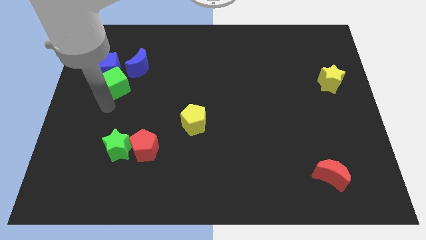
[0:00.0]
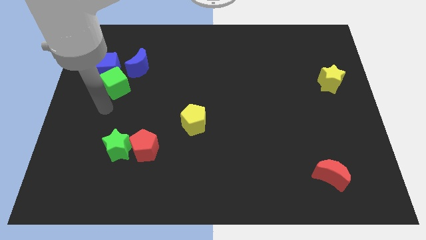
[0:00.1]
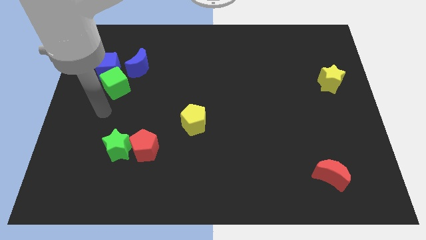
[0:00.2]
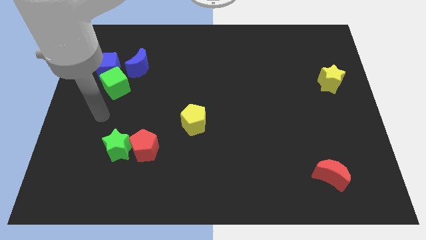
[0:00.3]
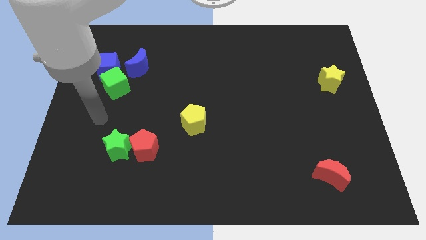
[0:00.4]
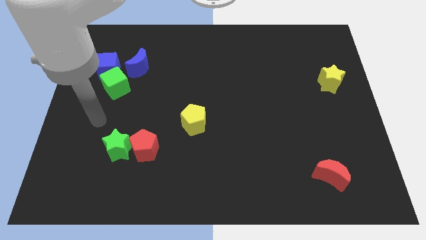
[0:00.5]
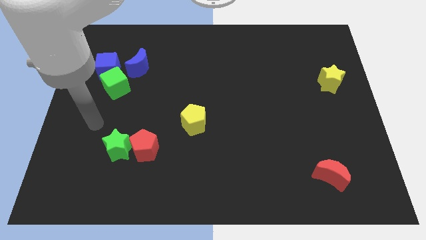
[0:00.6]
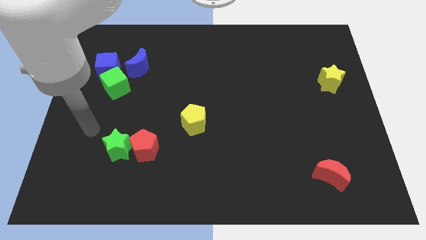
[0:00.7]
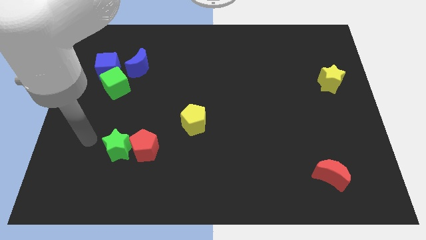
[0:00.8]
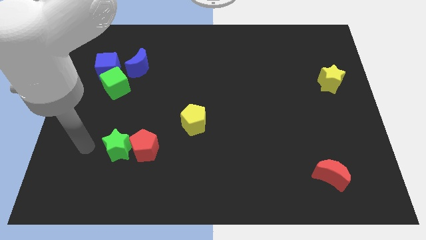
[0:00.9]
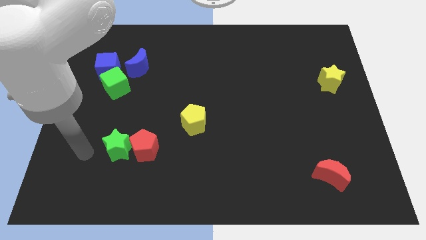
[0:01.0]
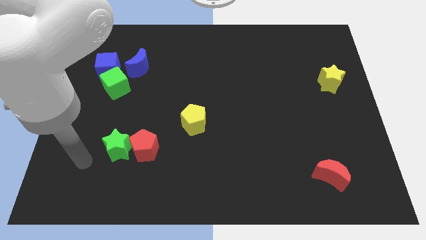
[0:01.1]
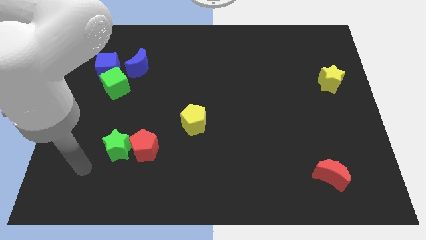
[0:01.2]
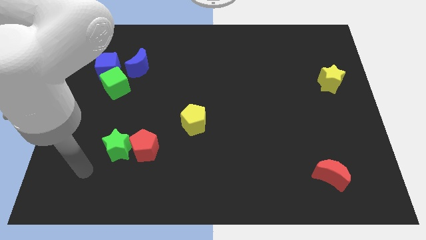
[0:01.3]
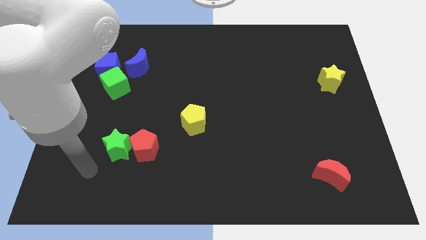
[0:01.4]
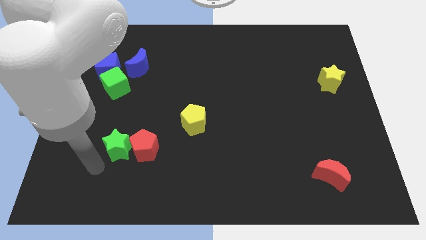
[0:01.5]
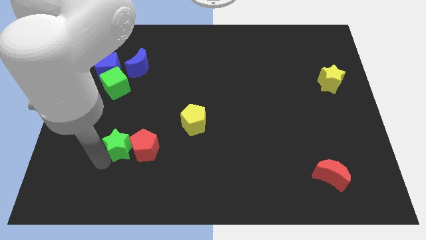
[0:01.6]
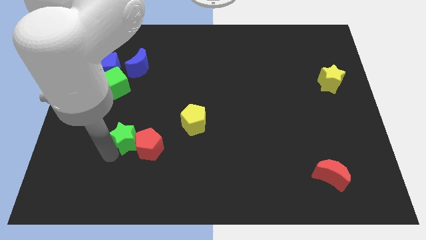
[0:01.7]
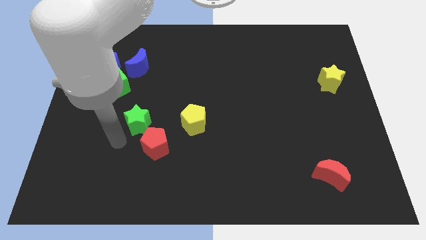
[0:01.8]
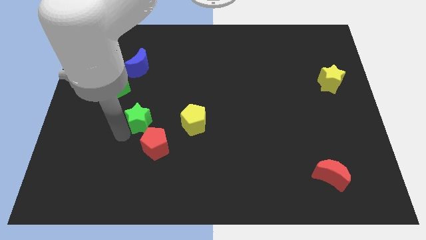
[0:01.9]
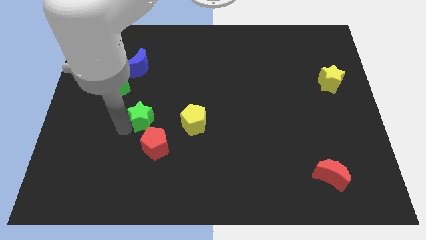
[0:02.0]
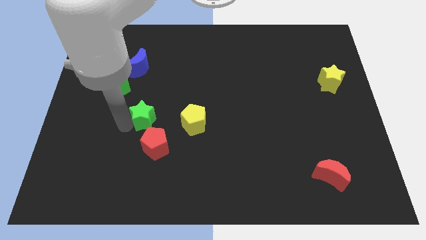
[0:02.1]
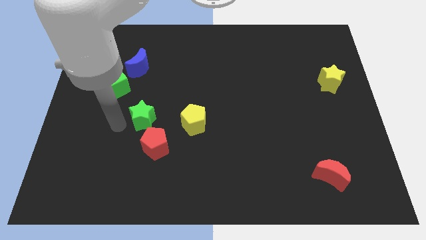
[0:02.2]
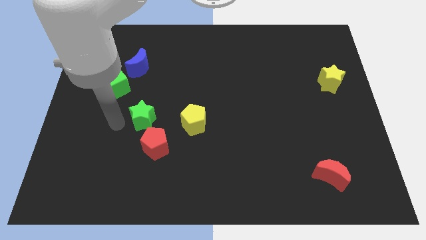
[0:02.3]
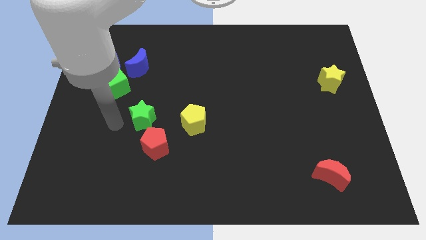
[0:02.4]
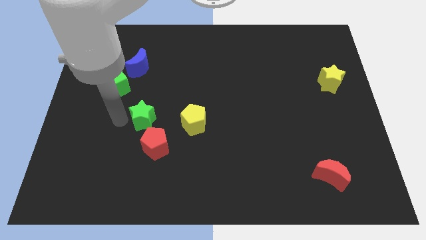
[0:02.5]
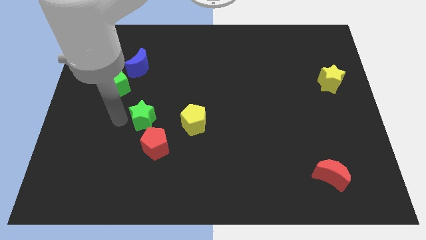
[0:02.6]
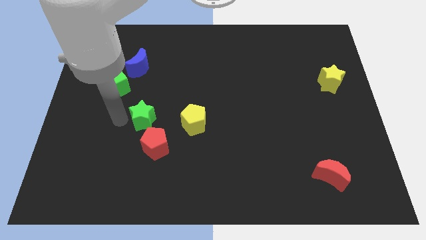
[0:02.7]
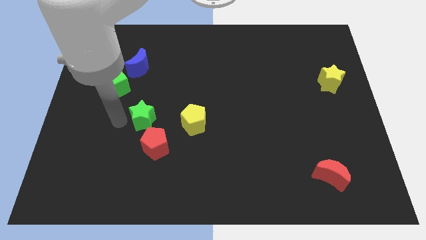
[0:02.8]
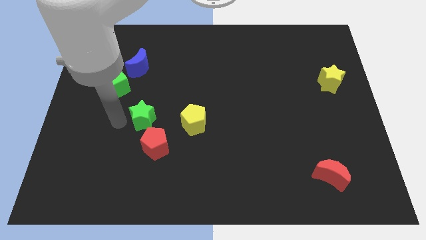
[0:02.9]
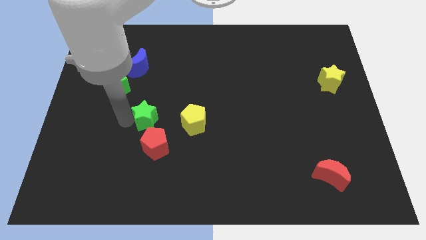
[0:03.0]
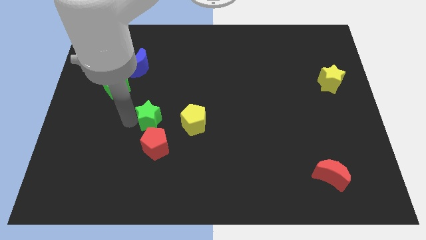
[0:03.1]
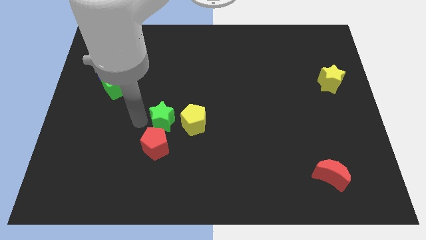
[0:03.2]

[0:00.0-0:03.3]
place the green star above the red pentagon

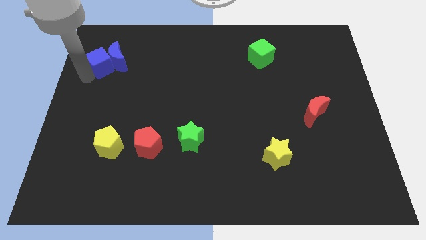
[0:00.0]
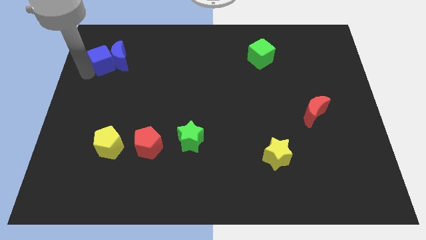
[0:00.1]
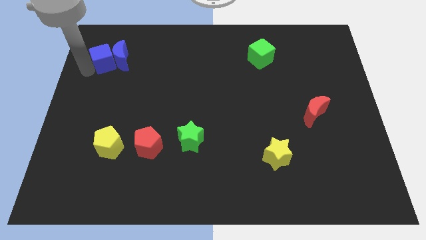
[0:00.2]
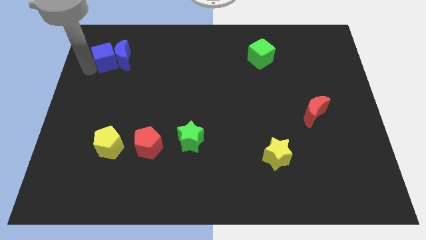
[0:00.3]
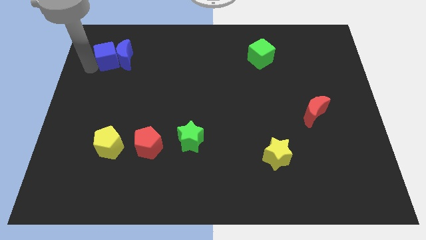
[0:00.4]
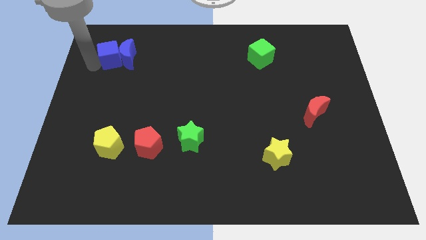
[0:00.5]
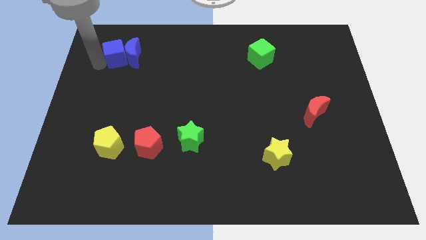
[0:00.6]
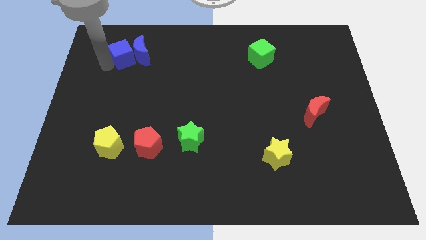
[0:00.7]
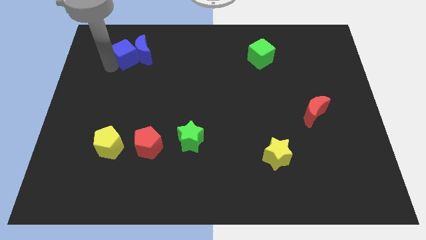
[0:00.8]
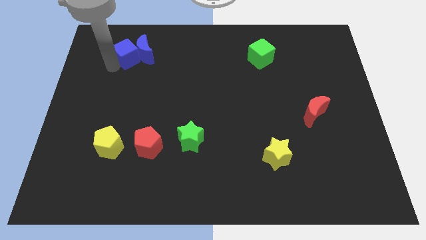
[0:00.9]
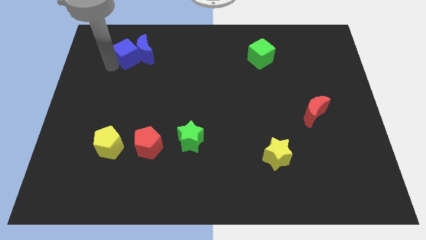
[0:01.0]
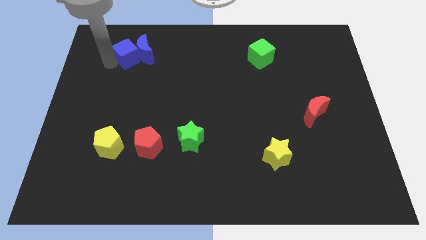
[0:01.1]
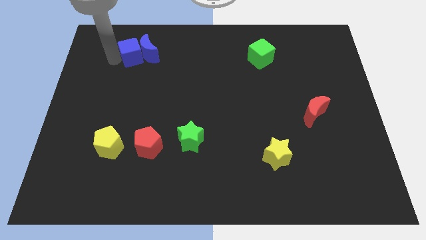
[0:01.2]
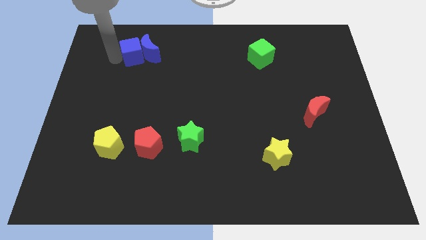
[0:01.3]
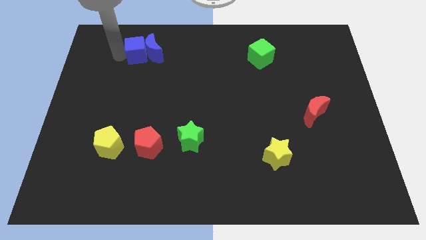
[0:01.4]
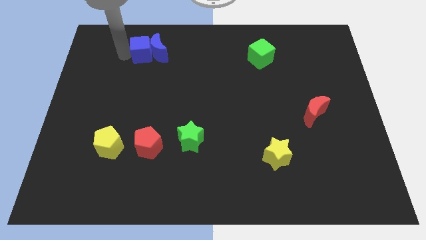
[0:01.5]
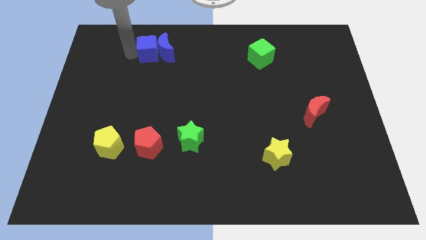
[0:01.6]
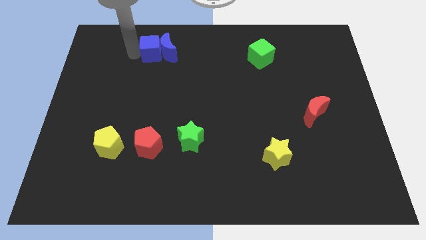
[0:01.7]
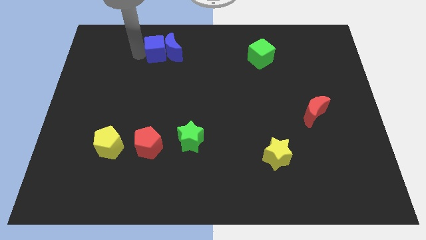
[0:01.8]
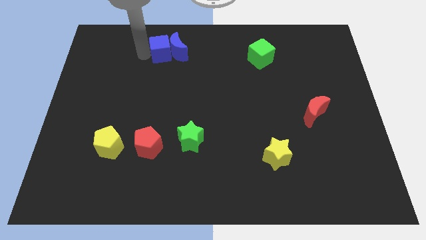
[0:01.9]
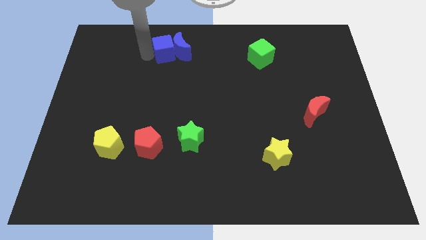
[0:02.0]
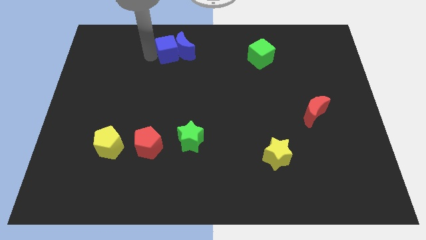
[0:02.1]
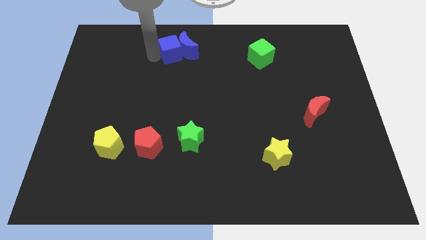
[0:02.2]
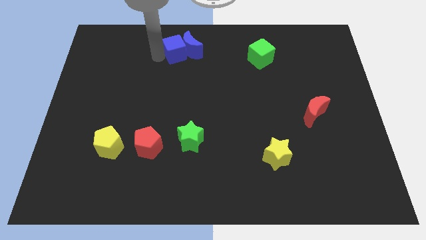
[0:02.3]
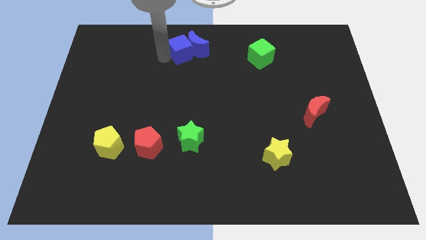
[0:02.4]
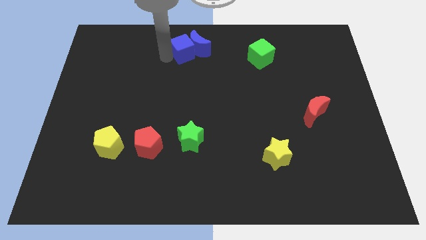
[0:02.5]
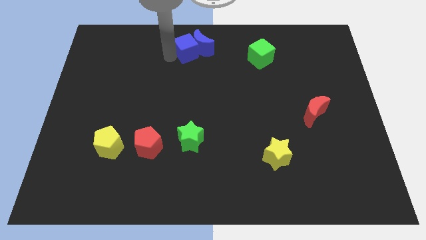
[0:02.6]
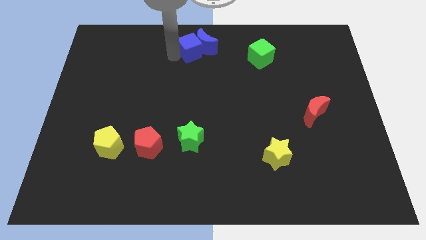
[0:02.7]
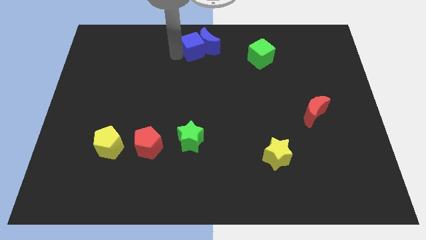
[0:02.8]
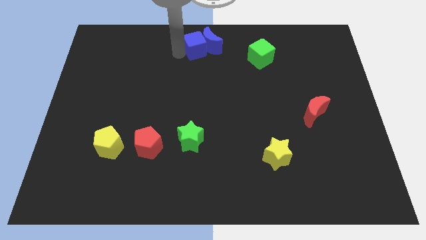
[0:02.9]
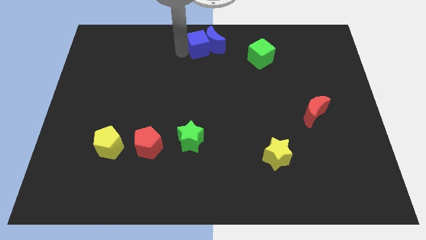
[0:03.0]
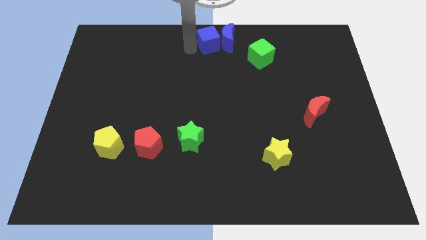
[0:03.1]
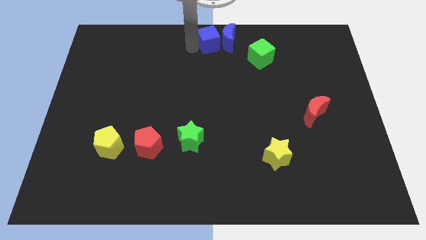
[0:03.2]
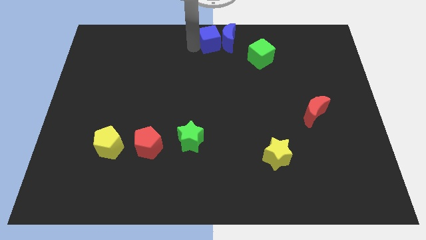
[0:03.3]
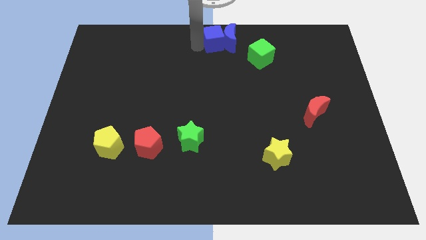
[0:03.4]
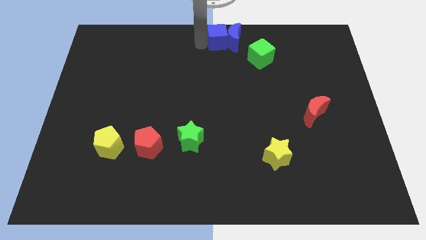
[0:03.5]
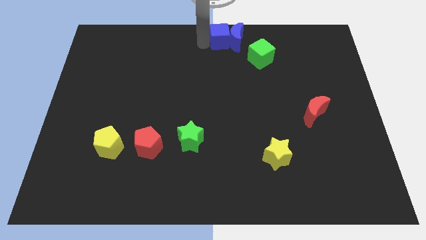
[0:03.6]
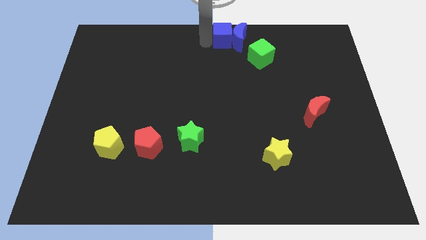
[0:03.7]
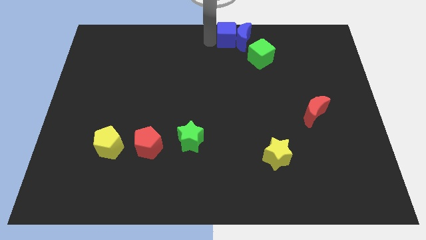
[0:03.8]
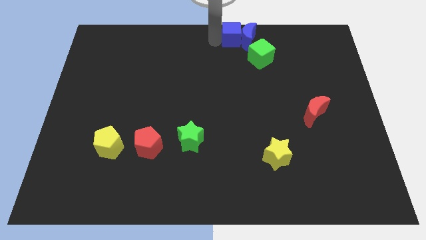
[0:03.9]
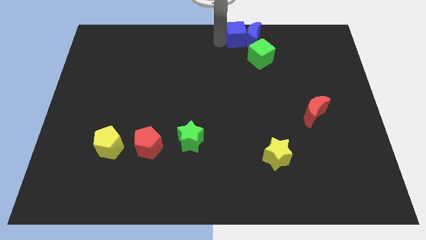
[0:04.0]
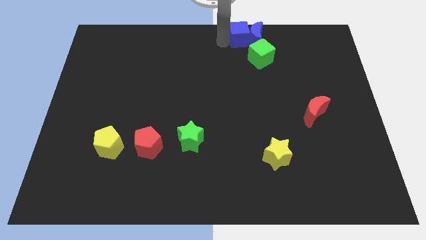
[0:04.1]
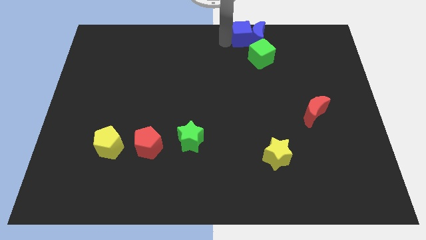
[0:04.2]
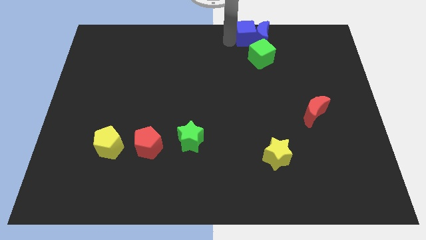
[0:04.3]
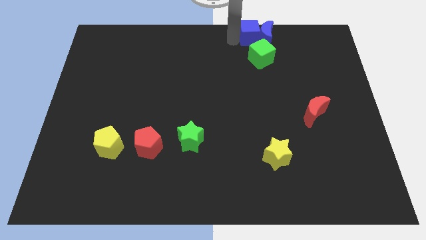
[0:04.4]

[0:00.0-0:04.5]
place the blue blocks to the top center

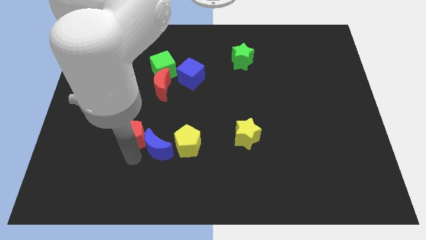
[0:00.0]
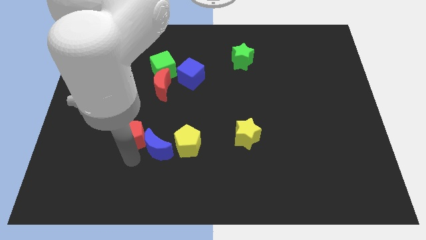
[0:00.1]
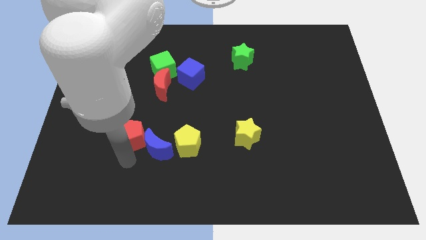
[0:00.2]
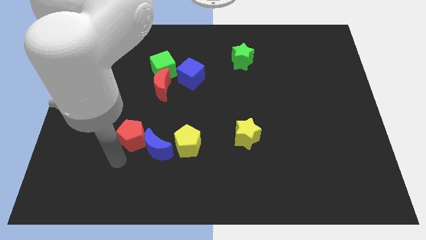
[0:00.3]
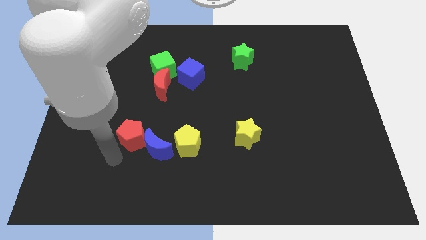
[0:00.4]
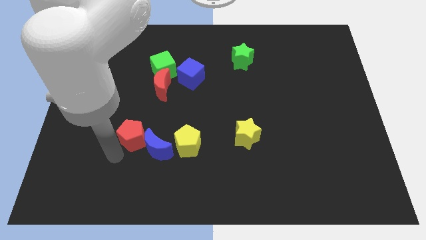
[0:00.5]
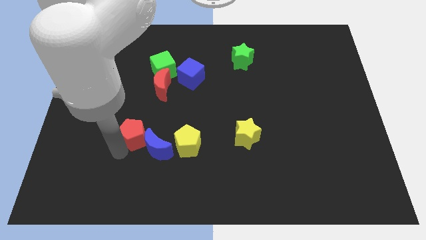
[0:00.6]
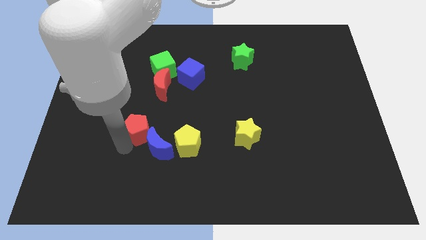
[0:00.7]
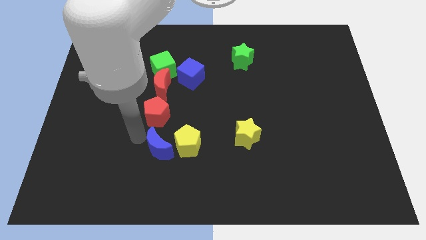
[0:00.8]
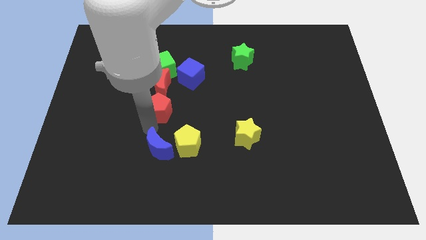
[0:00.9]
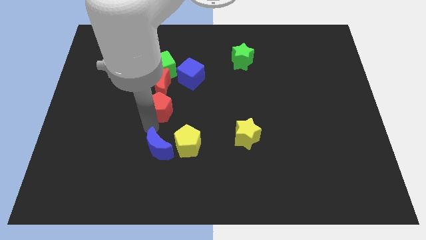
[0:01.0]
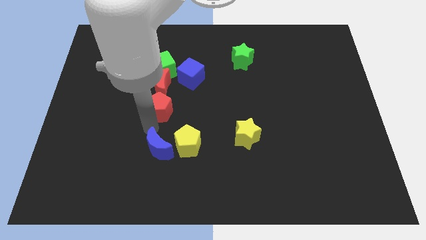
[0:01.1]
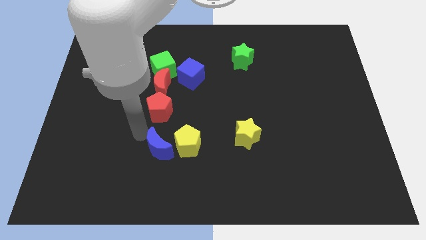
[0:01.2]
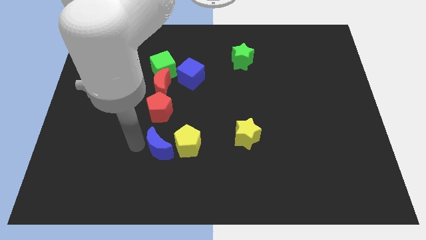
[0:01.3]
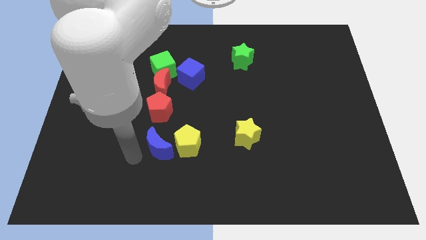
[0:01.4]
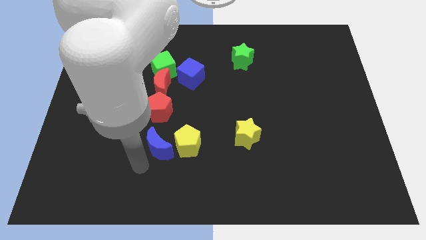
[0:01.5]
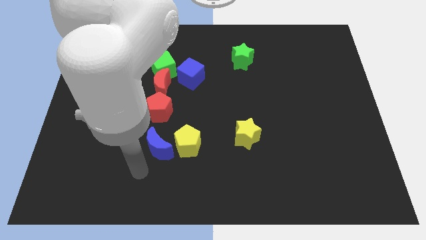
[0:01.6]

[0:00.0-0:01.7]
move the red pentagon below the red moon
